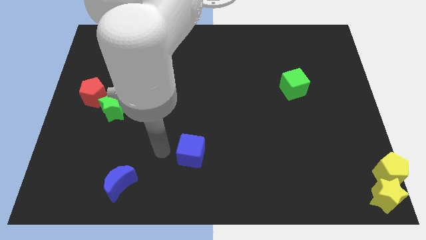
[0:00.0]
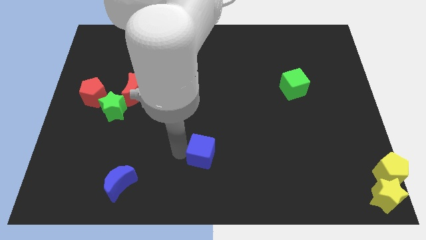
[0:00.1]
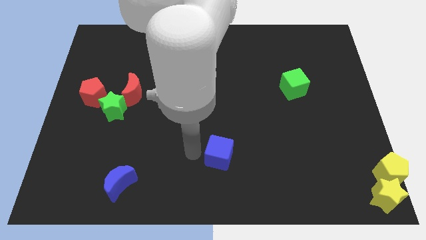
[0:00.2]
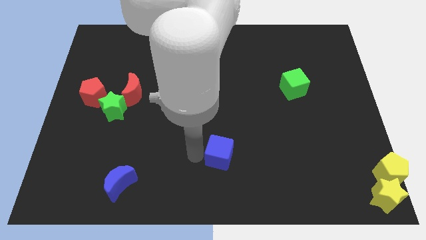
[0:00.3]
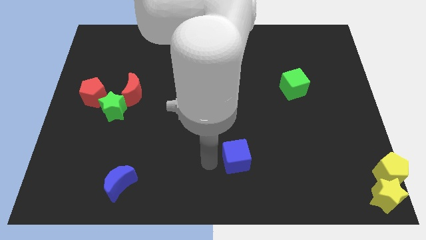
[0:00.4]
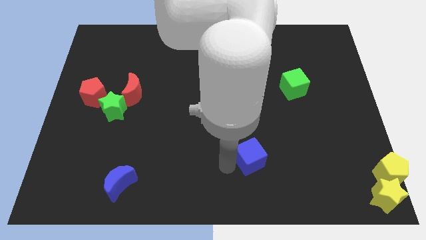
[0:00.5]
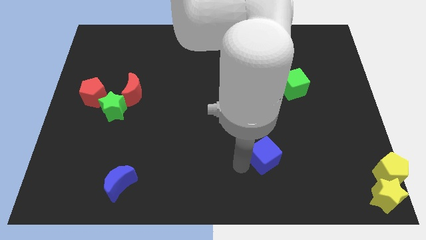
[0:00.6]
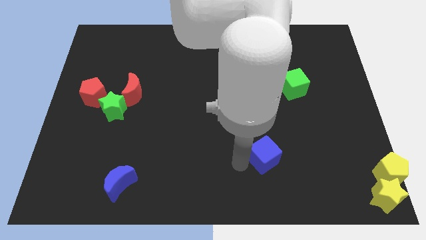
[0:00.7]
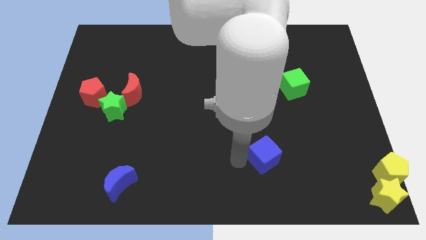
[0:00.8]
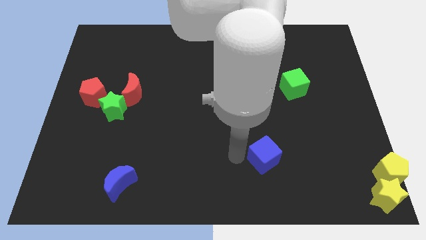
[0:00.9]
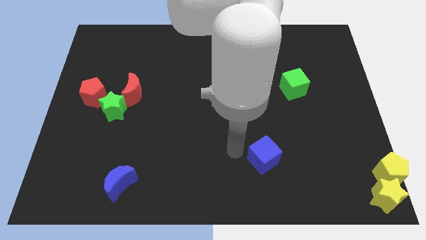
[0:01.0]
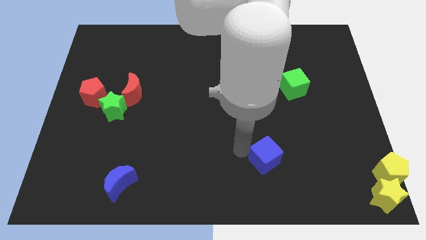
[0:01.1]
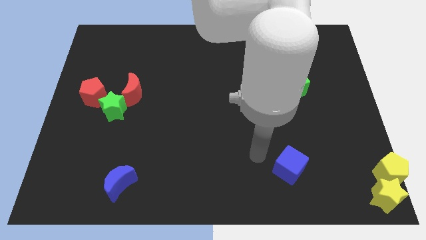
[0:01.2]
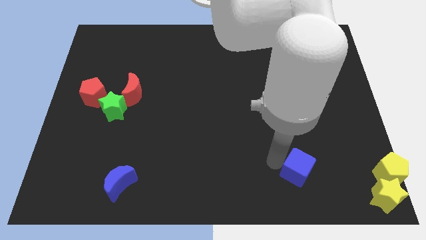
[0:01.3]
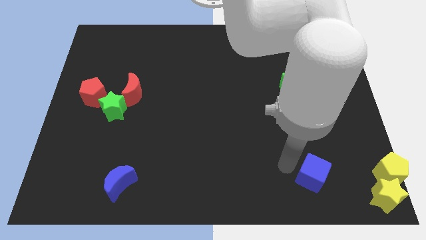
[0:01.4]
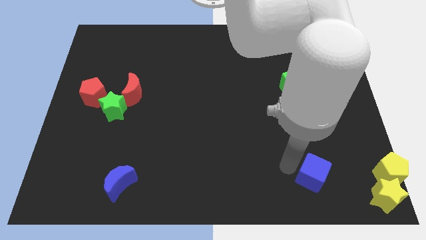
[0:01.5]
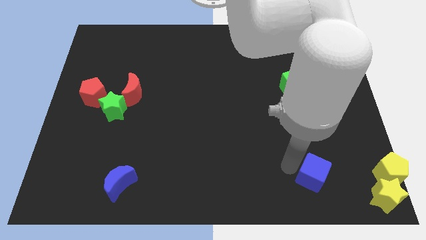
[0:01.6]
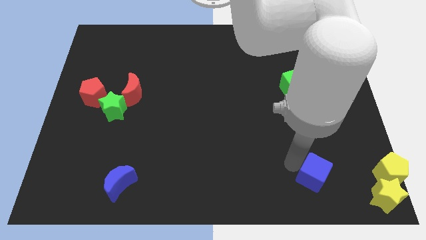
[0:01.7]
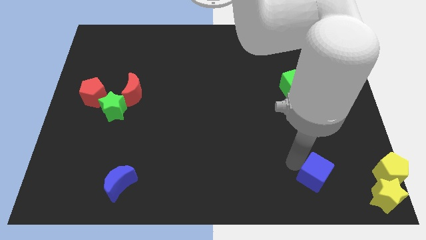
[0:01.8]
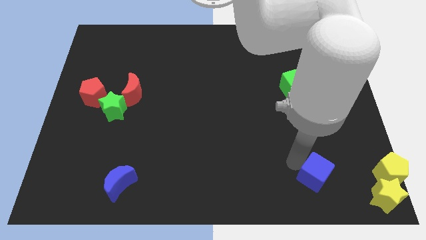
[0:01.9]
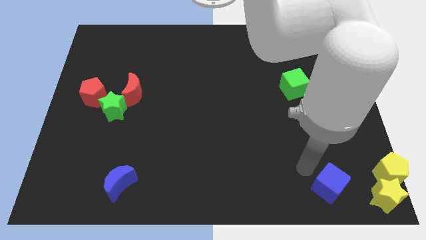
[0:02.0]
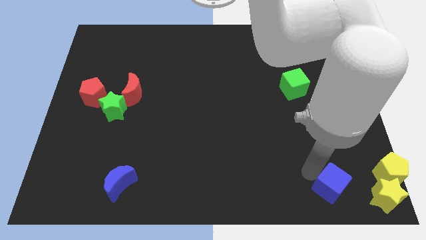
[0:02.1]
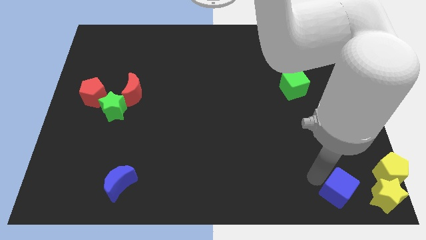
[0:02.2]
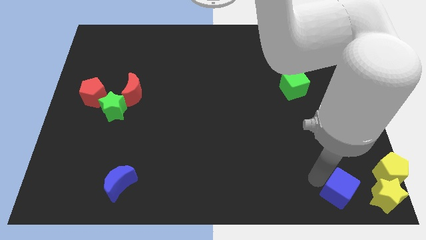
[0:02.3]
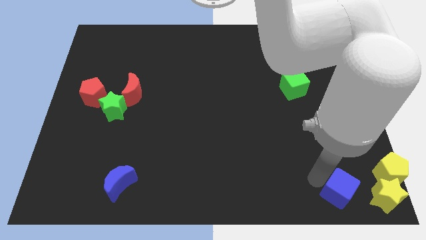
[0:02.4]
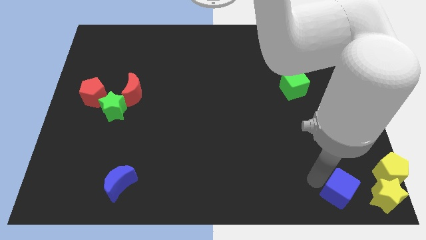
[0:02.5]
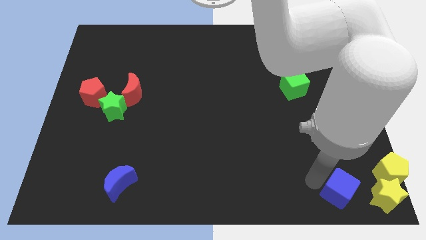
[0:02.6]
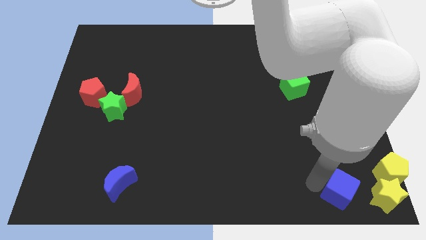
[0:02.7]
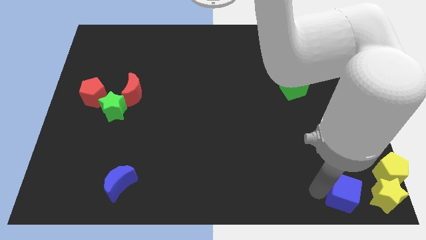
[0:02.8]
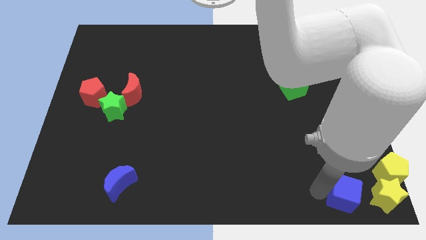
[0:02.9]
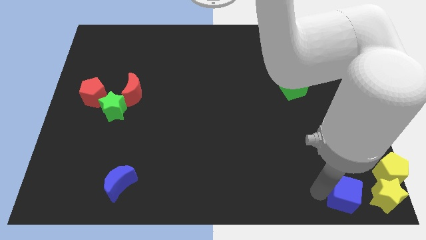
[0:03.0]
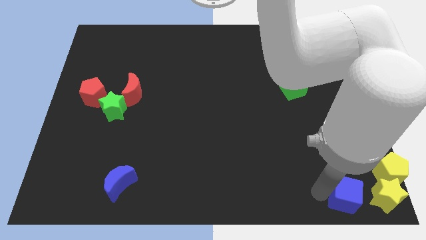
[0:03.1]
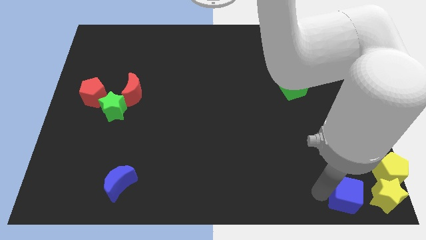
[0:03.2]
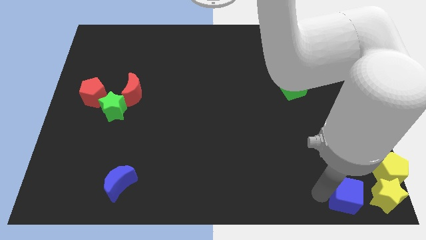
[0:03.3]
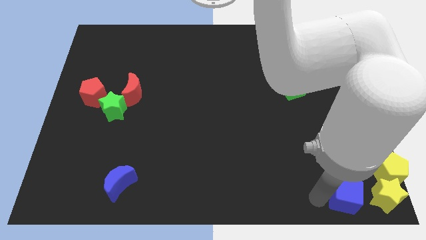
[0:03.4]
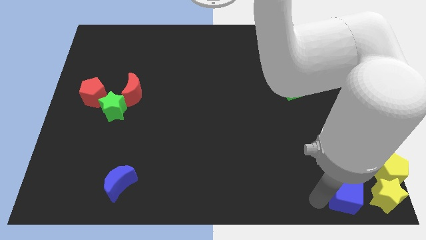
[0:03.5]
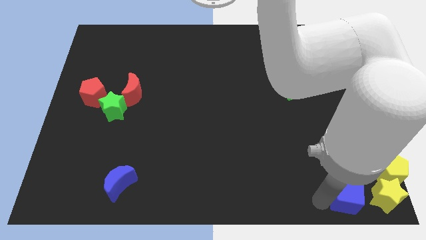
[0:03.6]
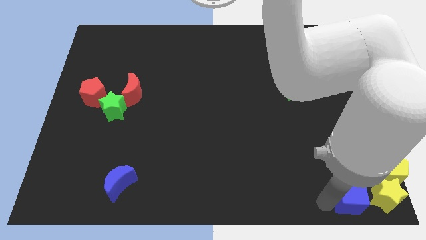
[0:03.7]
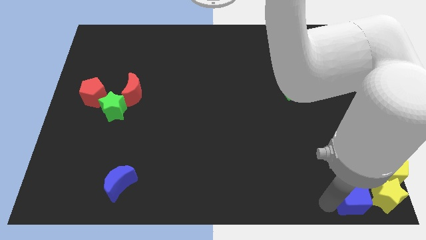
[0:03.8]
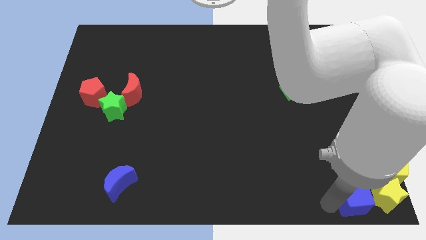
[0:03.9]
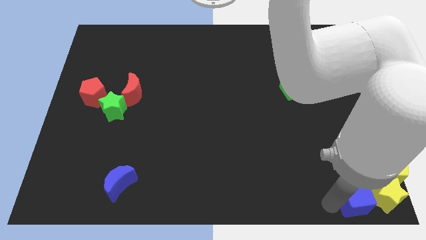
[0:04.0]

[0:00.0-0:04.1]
move the blue cube left to the yellow star

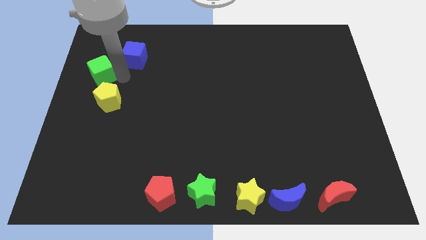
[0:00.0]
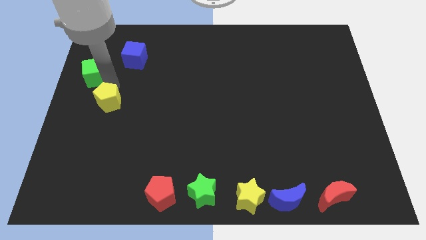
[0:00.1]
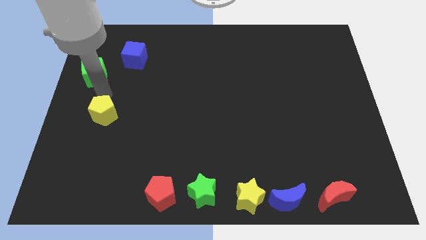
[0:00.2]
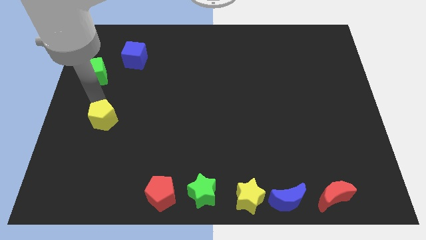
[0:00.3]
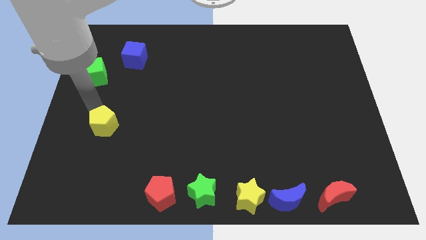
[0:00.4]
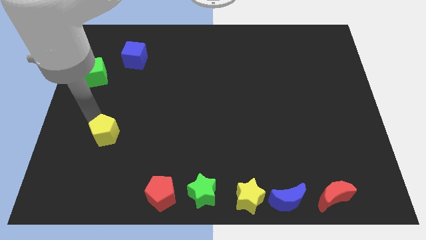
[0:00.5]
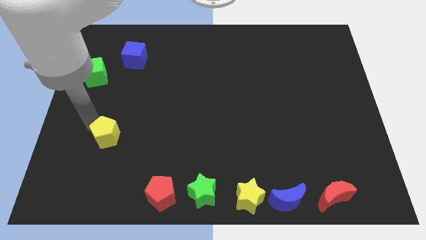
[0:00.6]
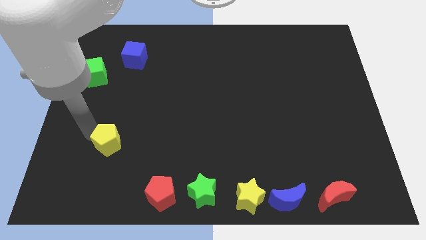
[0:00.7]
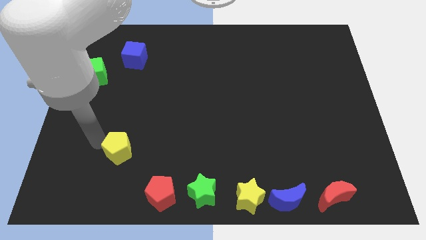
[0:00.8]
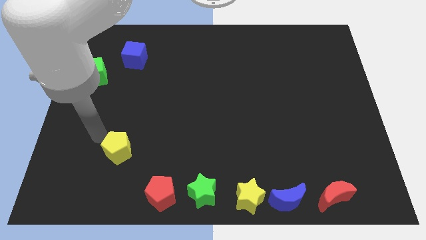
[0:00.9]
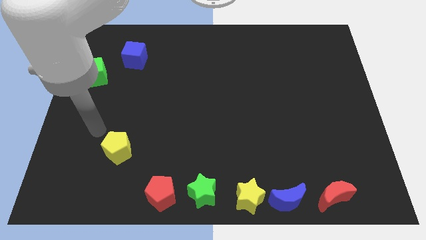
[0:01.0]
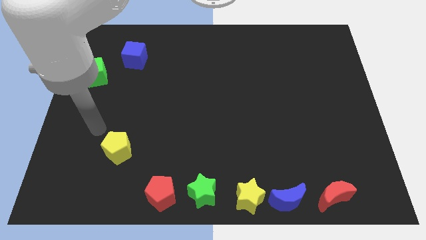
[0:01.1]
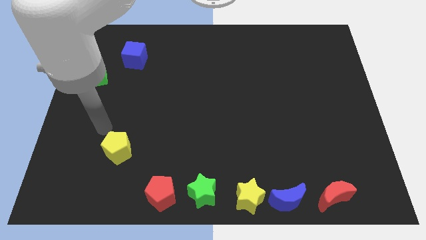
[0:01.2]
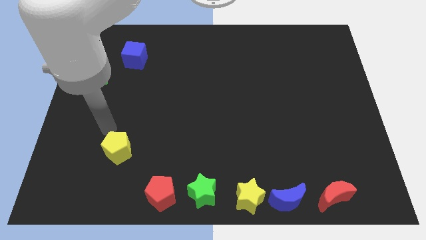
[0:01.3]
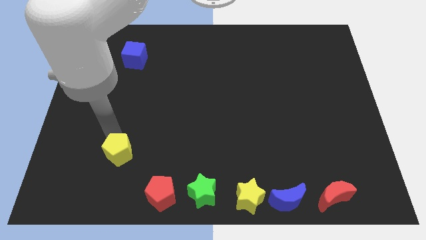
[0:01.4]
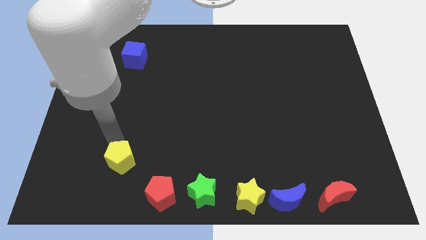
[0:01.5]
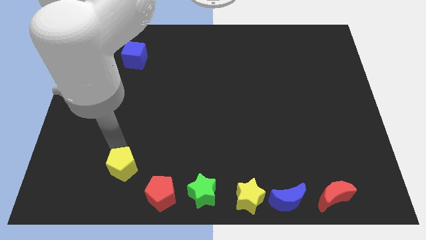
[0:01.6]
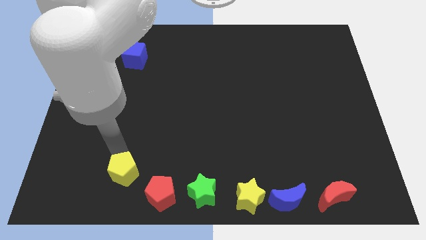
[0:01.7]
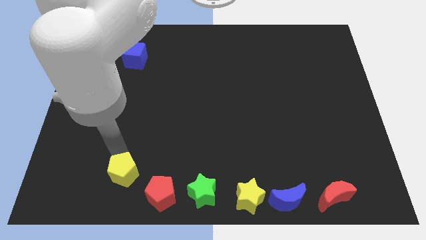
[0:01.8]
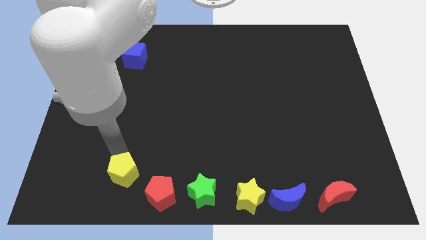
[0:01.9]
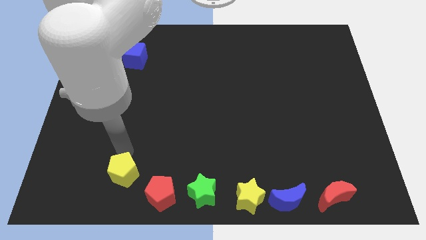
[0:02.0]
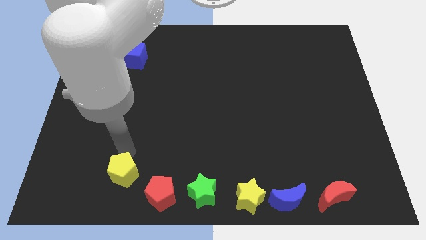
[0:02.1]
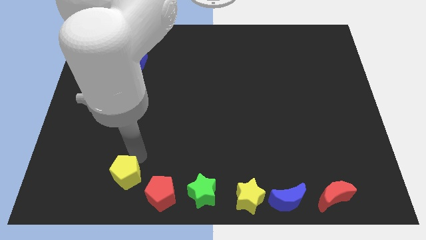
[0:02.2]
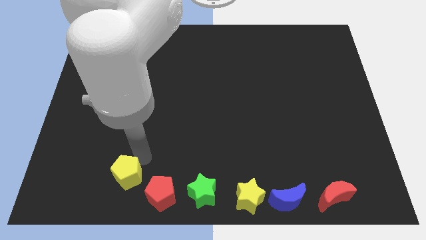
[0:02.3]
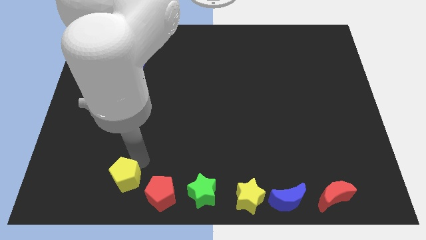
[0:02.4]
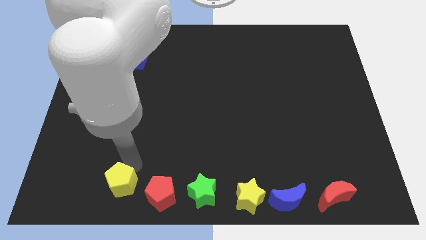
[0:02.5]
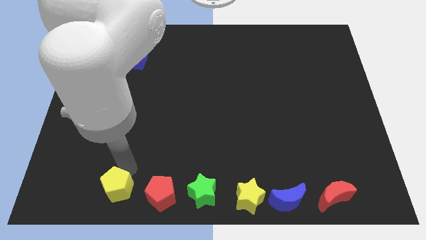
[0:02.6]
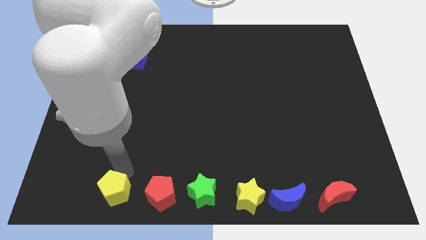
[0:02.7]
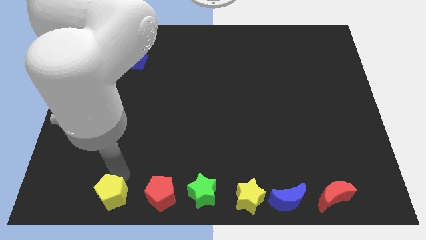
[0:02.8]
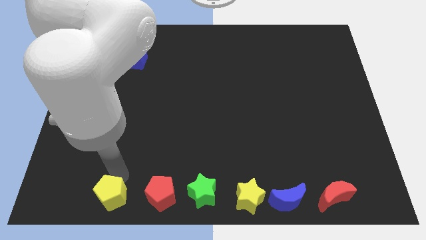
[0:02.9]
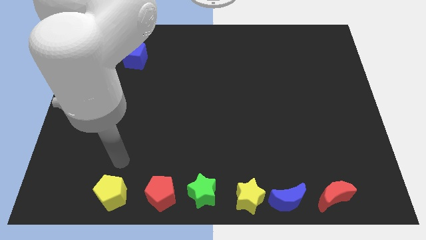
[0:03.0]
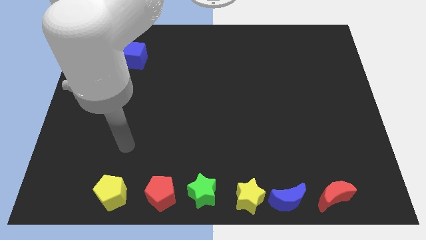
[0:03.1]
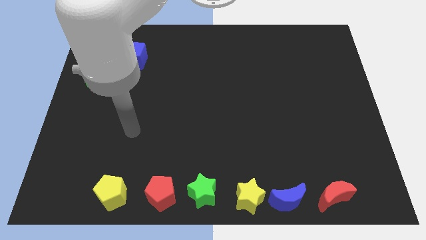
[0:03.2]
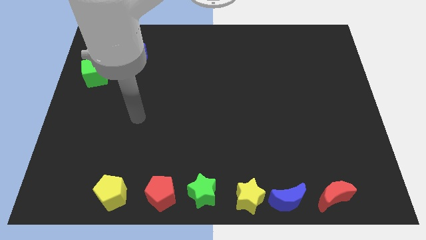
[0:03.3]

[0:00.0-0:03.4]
push the yellow pentagon at the bottom left of the board beside red pentagon

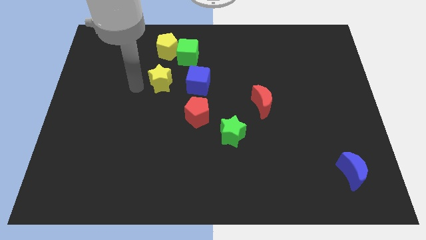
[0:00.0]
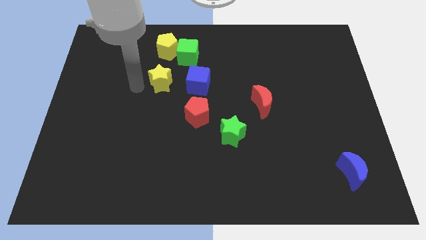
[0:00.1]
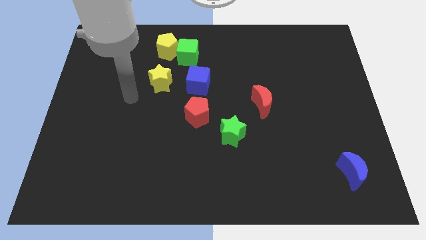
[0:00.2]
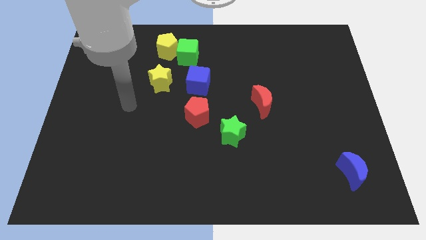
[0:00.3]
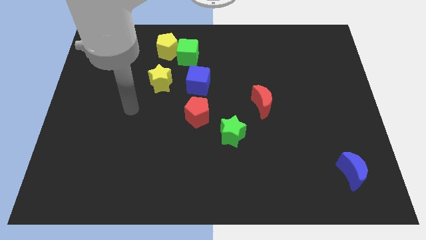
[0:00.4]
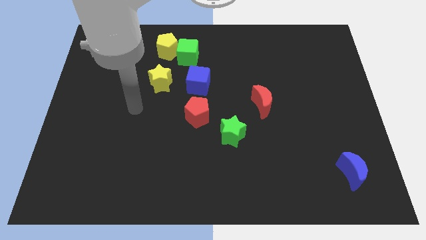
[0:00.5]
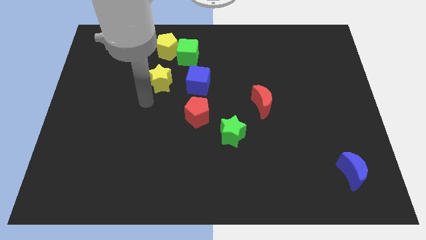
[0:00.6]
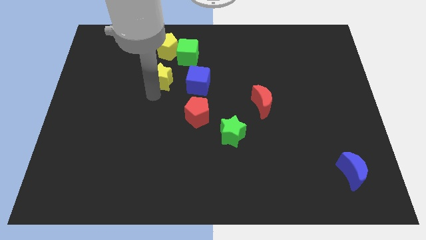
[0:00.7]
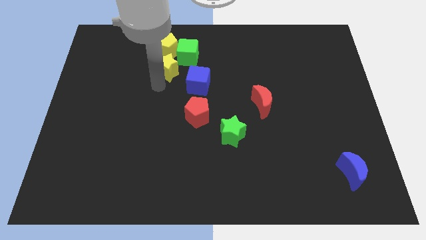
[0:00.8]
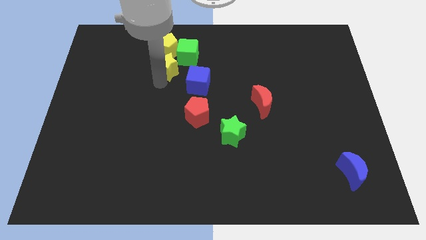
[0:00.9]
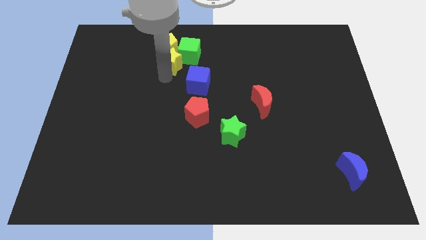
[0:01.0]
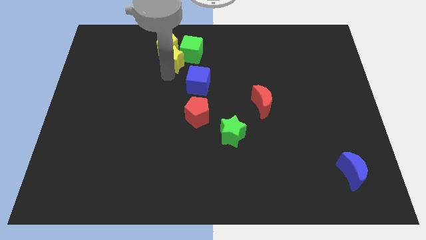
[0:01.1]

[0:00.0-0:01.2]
move the yellow star to the bottom left side of the green cube

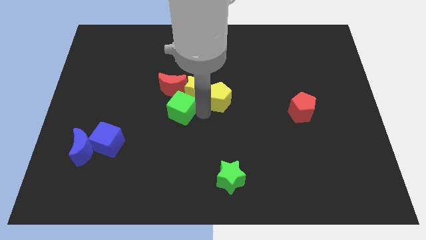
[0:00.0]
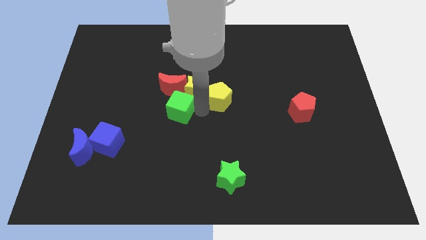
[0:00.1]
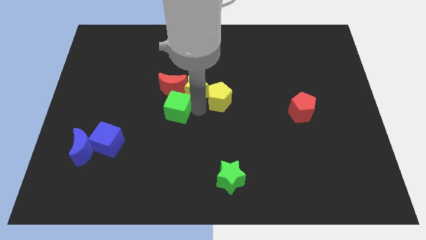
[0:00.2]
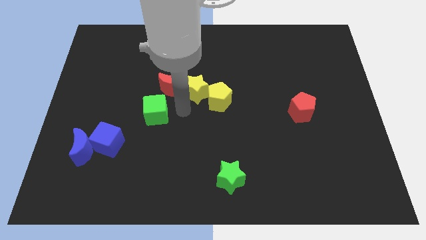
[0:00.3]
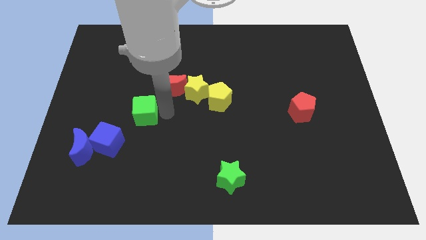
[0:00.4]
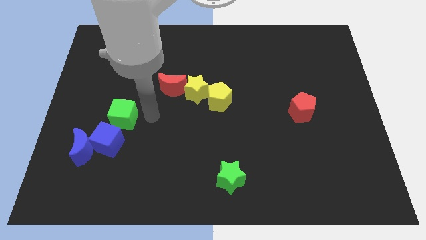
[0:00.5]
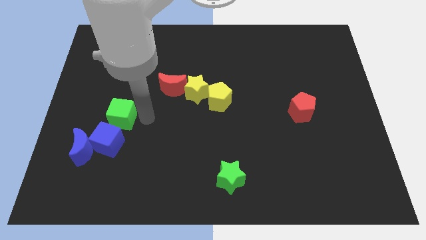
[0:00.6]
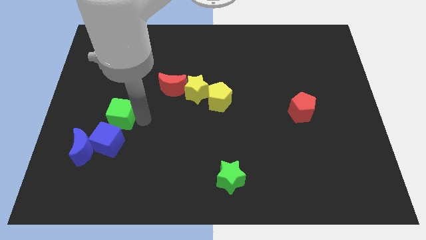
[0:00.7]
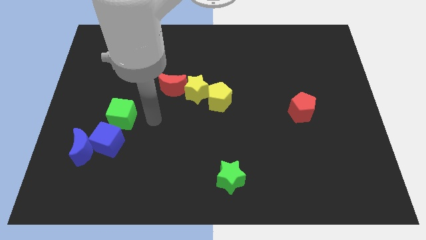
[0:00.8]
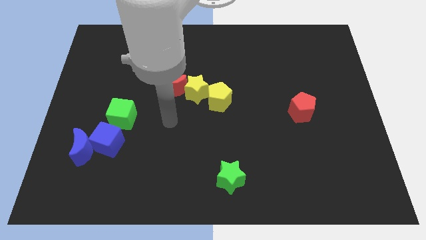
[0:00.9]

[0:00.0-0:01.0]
place green cube above blue cube
